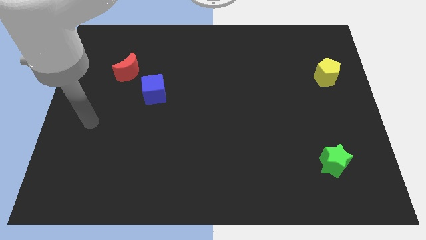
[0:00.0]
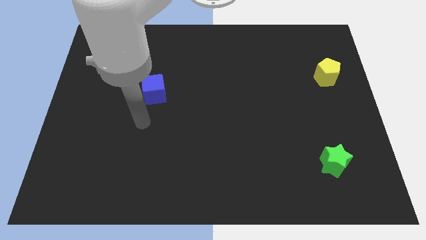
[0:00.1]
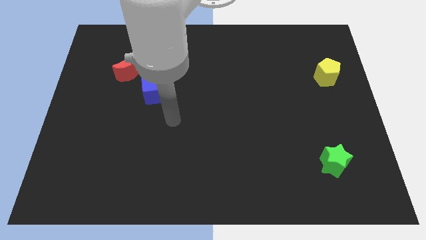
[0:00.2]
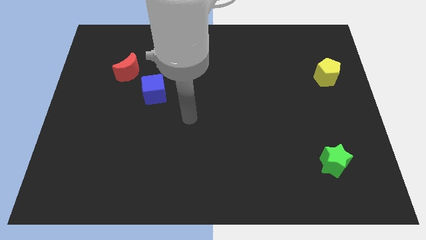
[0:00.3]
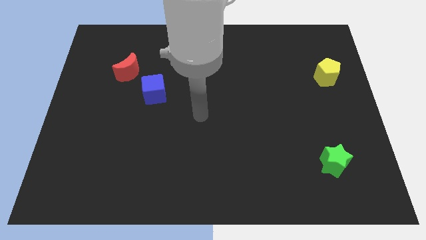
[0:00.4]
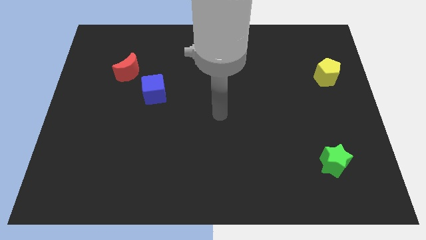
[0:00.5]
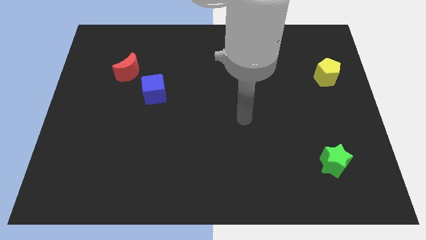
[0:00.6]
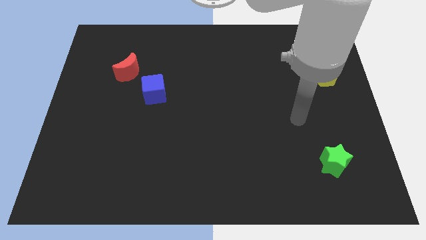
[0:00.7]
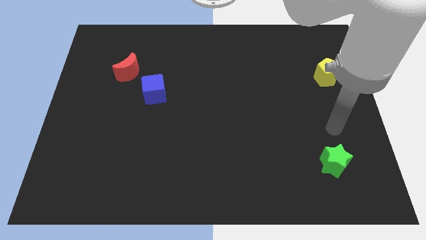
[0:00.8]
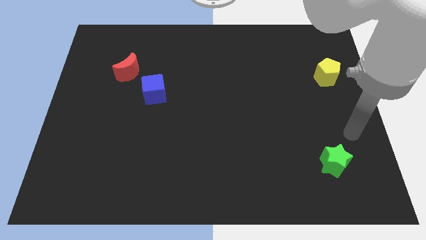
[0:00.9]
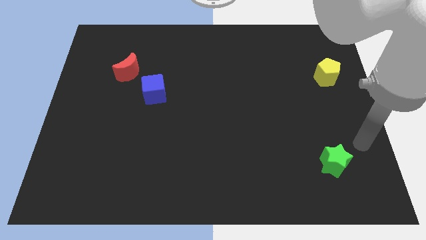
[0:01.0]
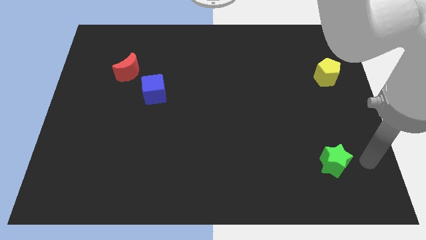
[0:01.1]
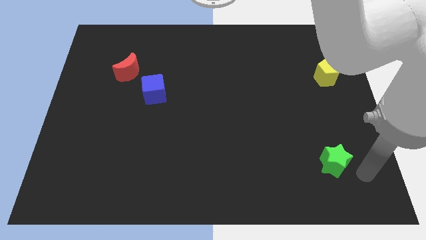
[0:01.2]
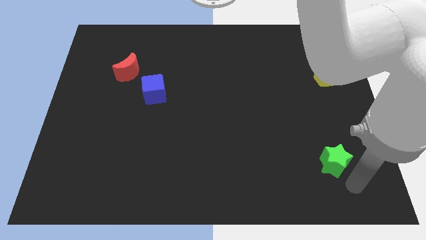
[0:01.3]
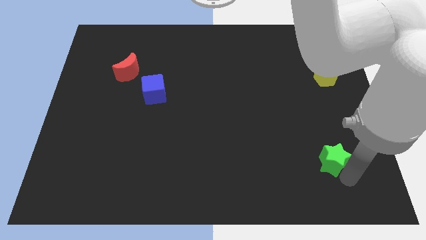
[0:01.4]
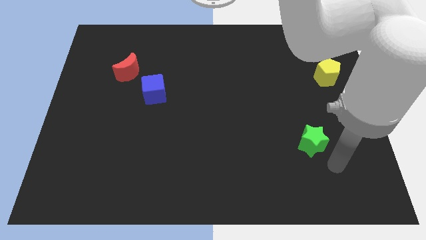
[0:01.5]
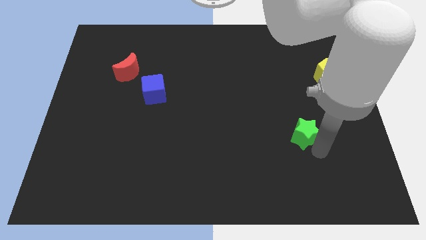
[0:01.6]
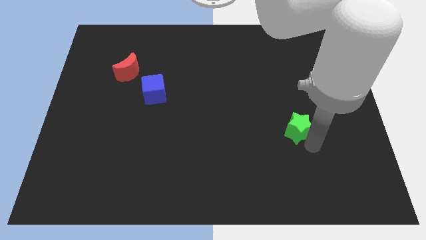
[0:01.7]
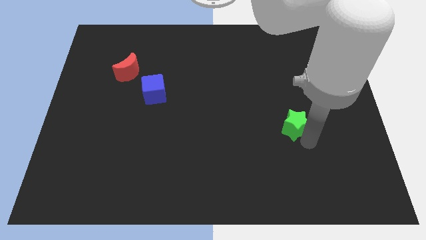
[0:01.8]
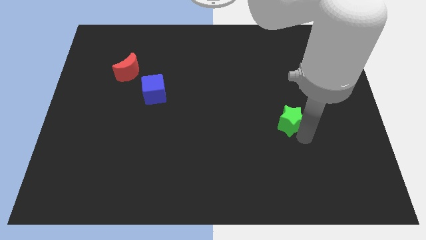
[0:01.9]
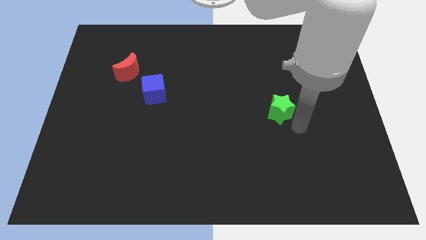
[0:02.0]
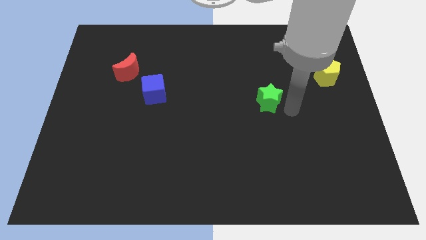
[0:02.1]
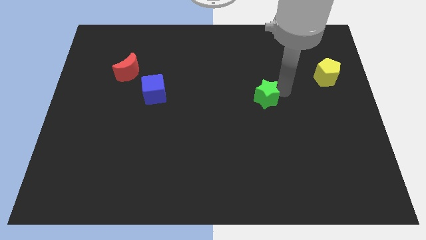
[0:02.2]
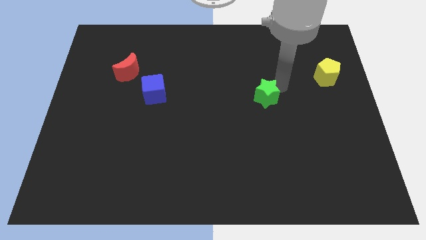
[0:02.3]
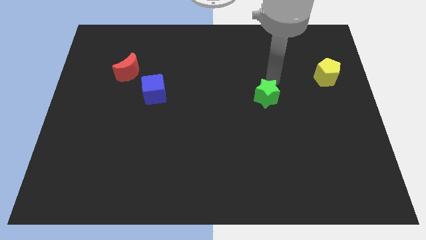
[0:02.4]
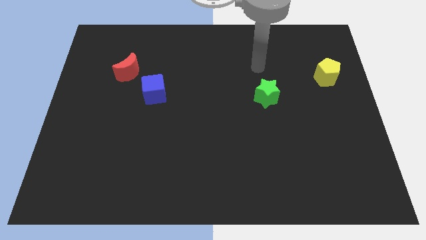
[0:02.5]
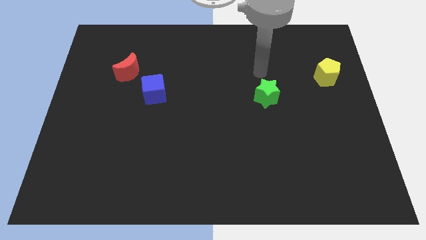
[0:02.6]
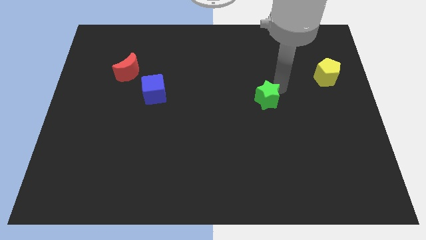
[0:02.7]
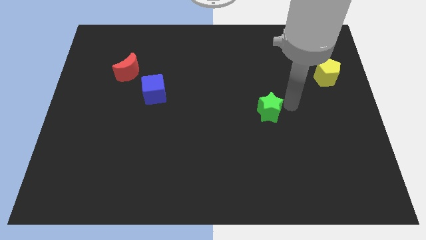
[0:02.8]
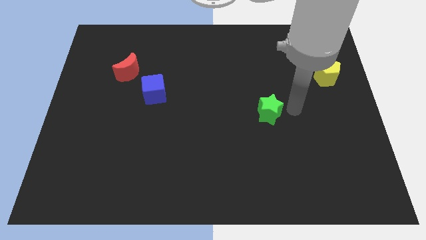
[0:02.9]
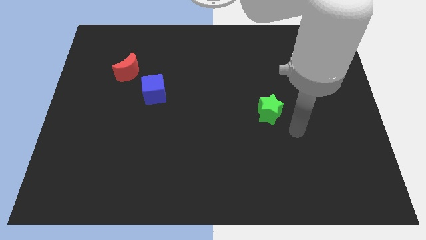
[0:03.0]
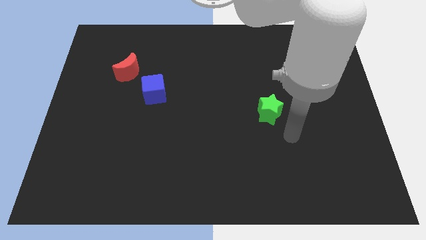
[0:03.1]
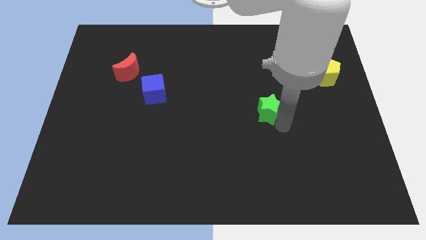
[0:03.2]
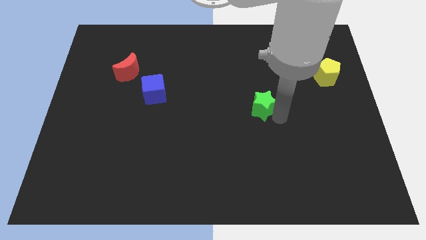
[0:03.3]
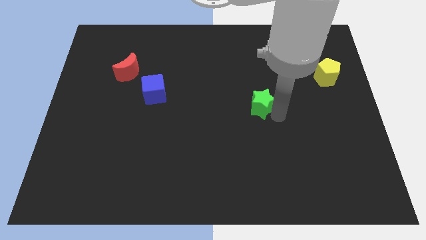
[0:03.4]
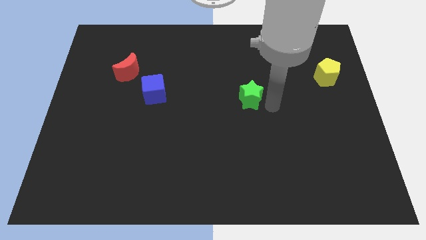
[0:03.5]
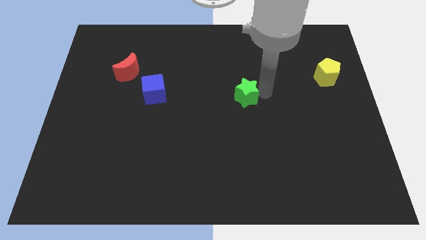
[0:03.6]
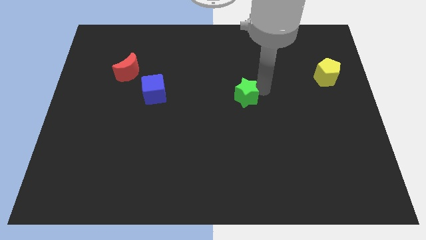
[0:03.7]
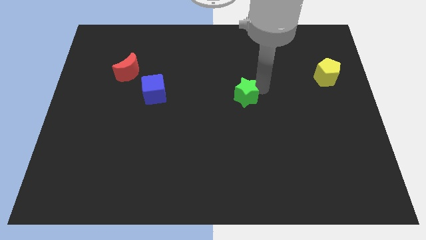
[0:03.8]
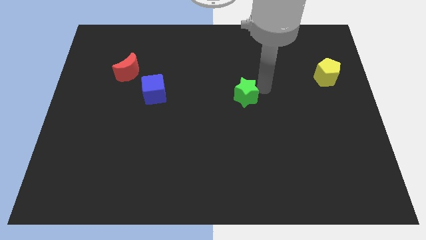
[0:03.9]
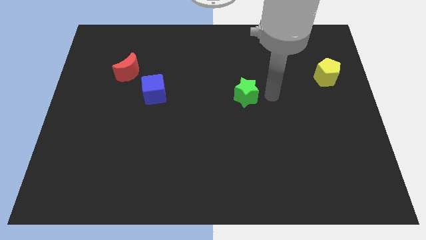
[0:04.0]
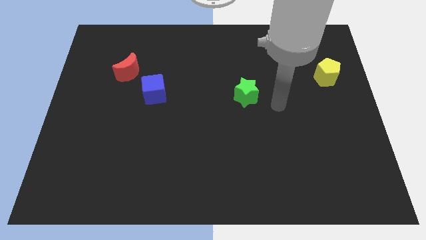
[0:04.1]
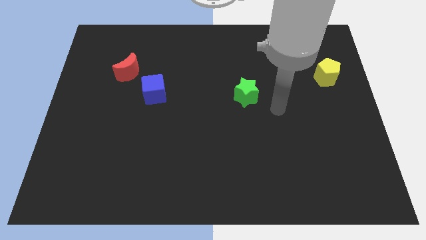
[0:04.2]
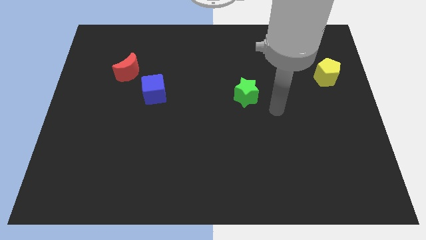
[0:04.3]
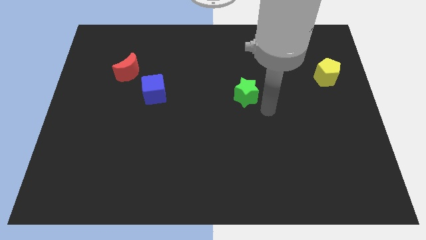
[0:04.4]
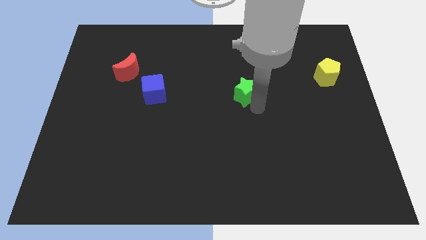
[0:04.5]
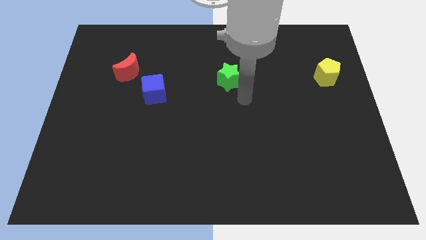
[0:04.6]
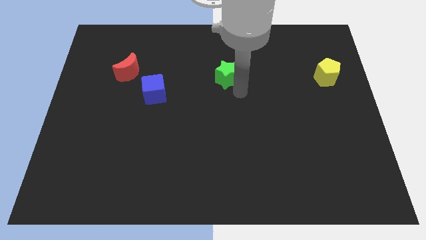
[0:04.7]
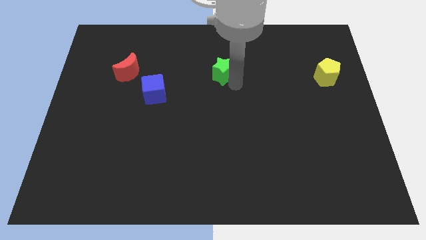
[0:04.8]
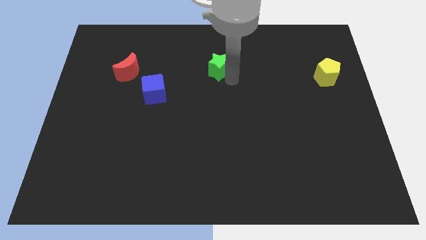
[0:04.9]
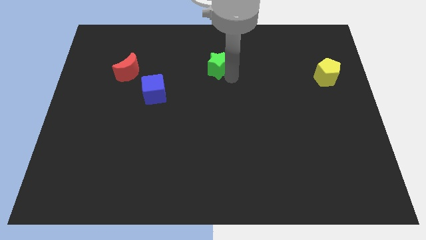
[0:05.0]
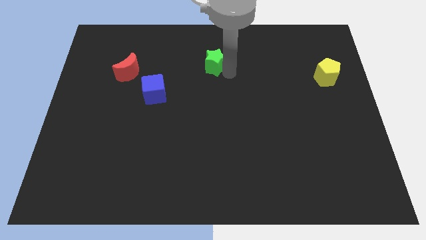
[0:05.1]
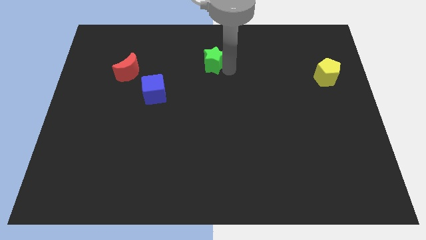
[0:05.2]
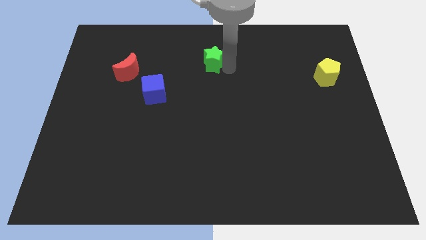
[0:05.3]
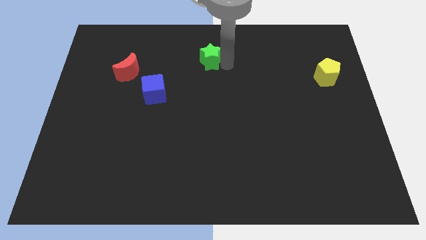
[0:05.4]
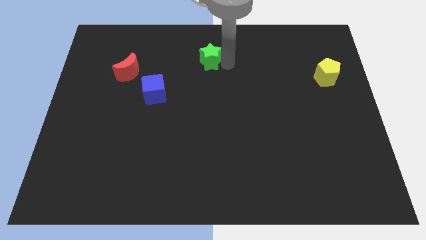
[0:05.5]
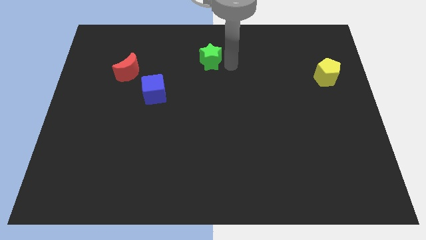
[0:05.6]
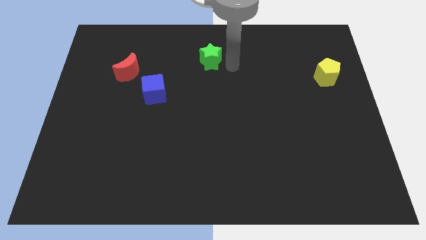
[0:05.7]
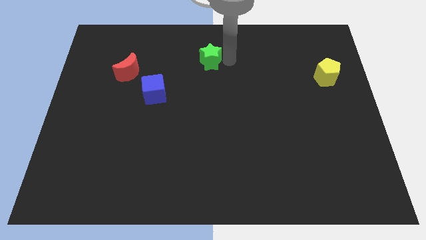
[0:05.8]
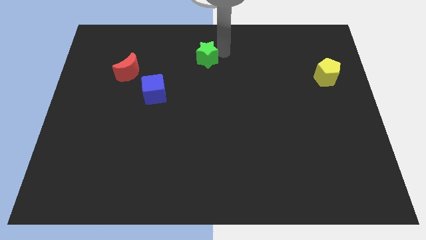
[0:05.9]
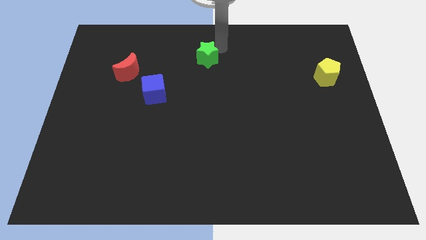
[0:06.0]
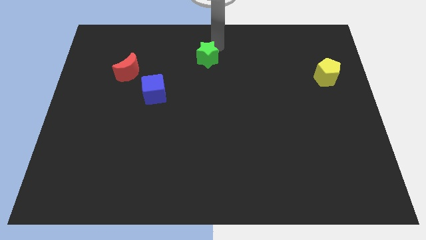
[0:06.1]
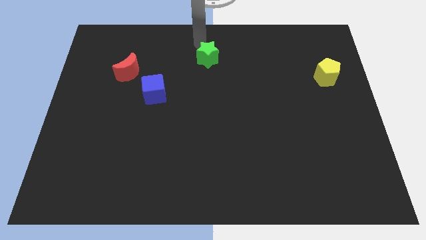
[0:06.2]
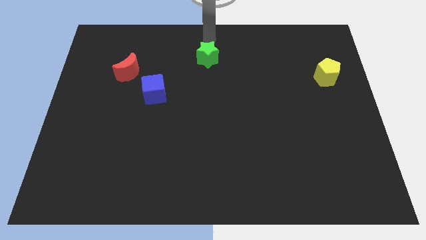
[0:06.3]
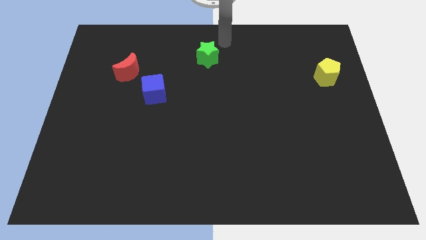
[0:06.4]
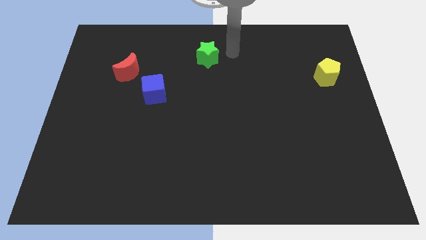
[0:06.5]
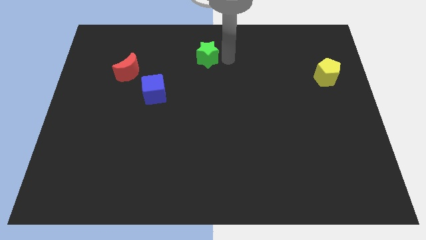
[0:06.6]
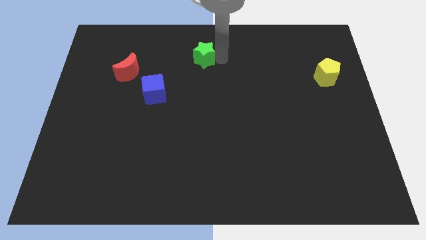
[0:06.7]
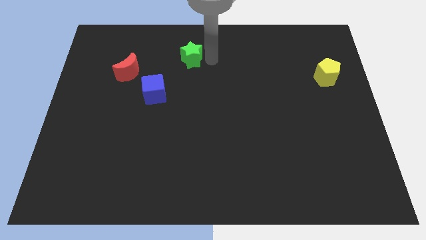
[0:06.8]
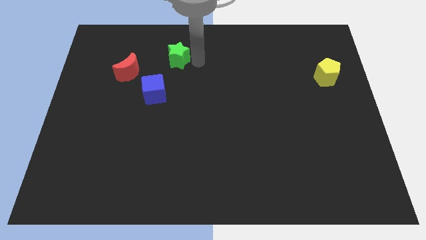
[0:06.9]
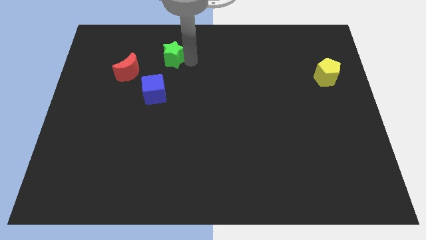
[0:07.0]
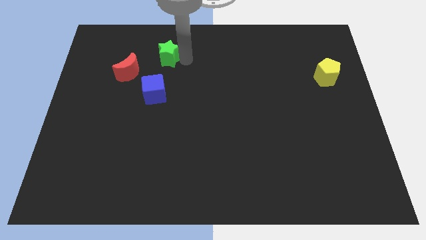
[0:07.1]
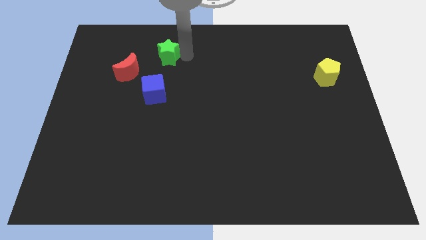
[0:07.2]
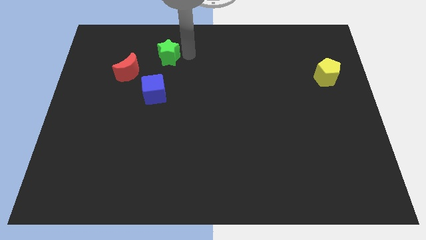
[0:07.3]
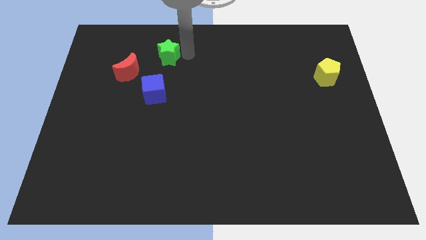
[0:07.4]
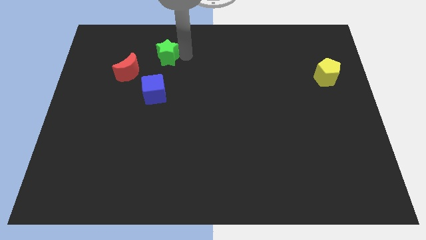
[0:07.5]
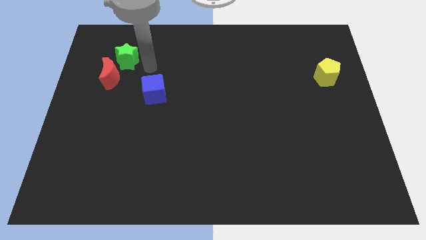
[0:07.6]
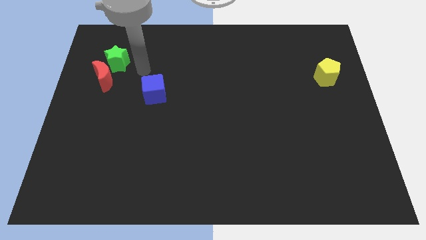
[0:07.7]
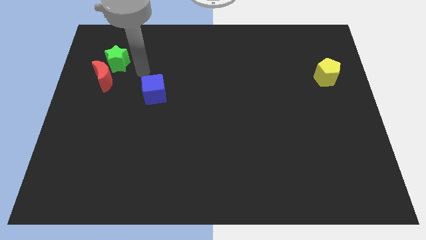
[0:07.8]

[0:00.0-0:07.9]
push the green star towards the moon

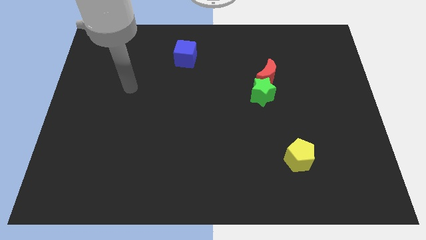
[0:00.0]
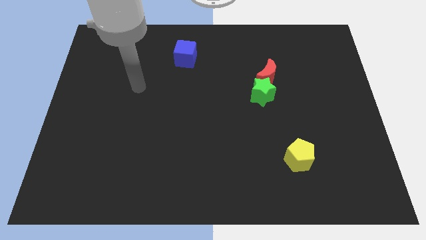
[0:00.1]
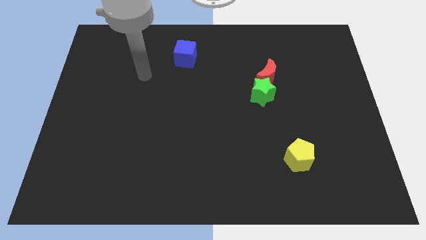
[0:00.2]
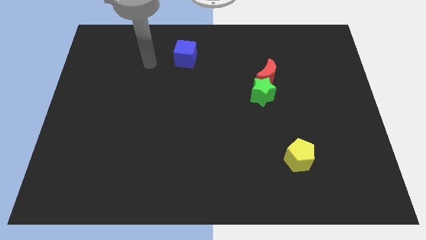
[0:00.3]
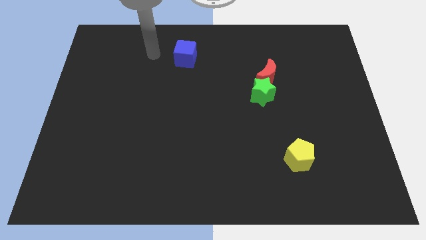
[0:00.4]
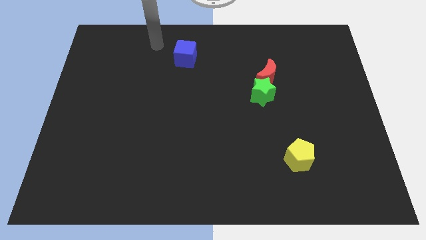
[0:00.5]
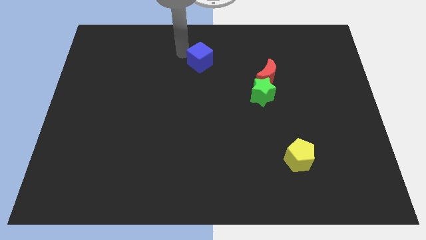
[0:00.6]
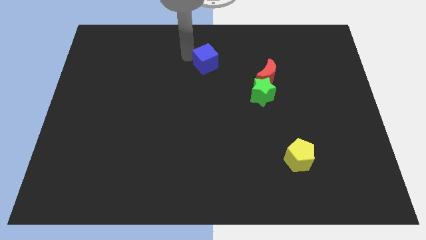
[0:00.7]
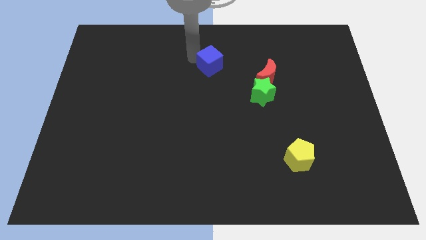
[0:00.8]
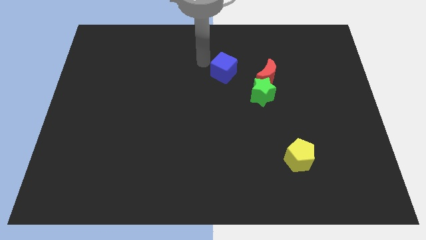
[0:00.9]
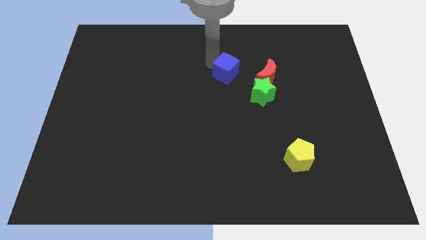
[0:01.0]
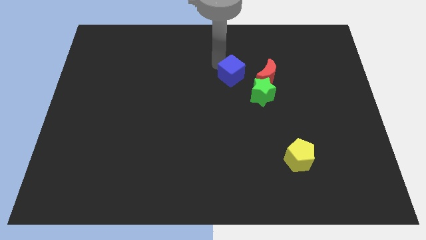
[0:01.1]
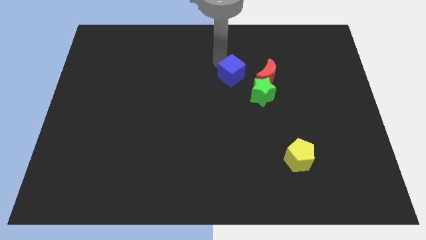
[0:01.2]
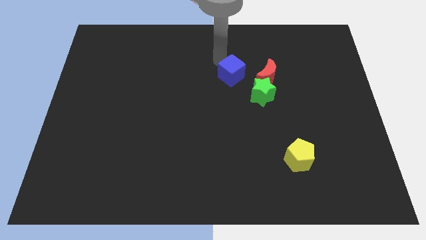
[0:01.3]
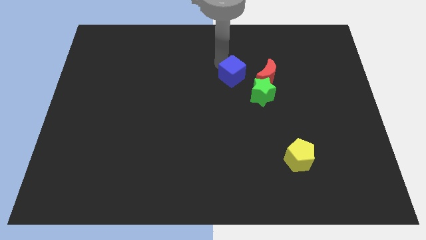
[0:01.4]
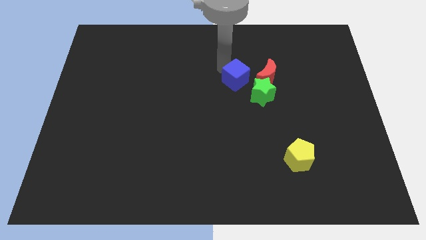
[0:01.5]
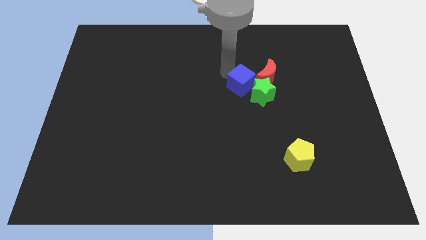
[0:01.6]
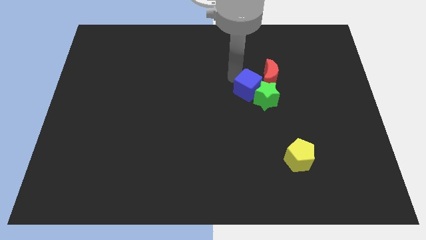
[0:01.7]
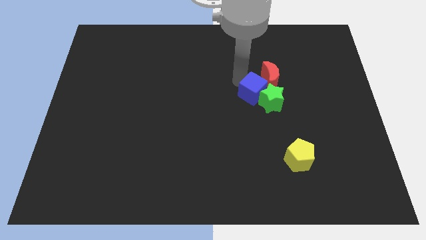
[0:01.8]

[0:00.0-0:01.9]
put the cube to the star
